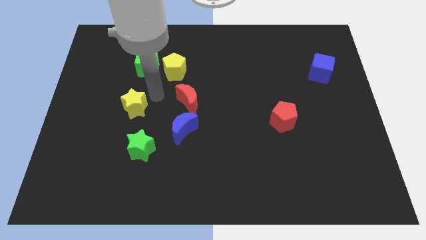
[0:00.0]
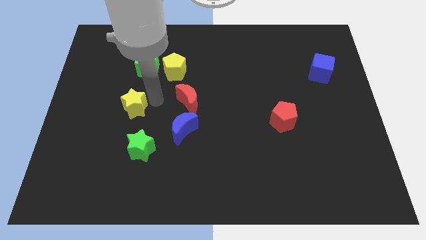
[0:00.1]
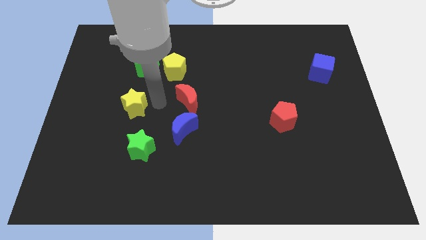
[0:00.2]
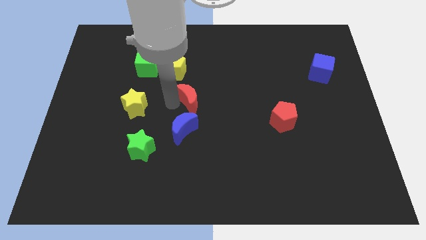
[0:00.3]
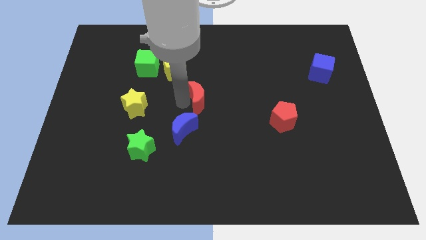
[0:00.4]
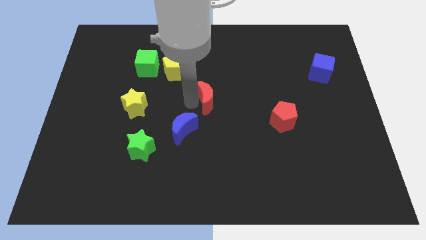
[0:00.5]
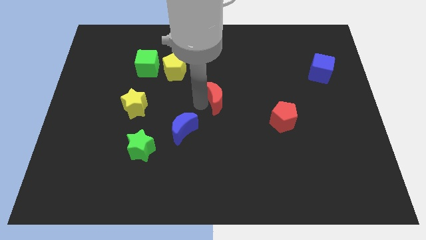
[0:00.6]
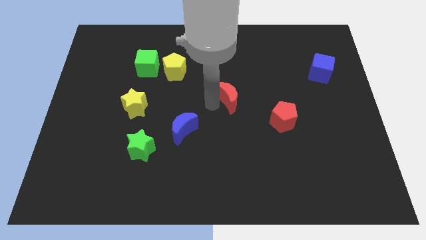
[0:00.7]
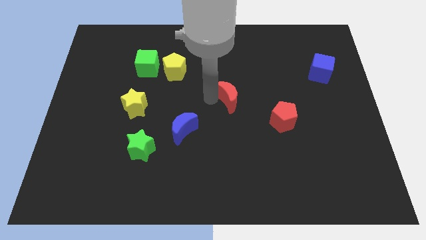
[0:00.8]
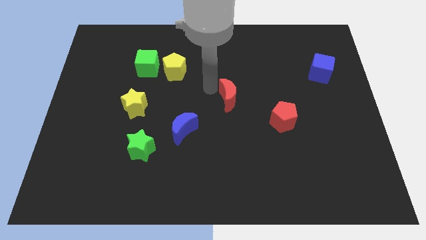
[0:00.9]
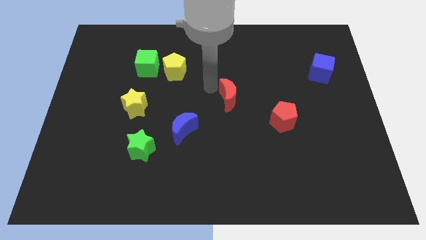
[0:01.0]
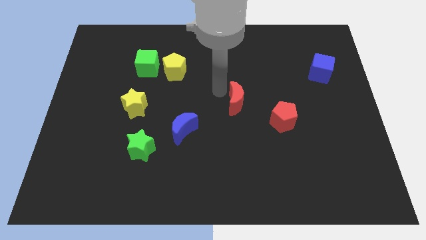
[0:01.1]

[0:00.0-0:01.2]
move the red crescent to the center of the board

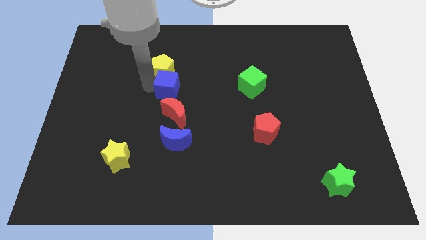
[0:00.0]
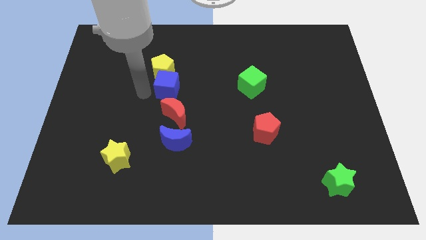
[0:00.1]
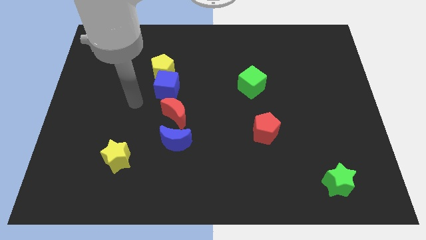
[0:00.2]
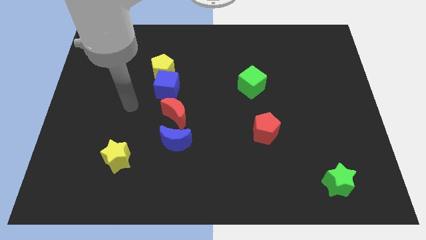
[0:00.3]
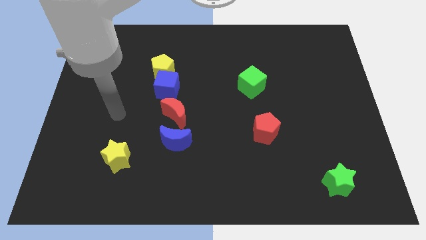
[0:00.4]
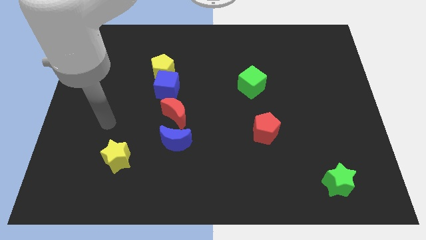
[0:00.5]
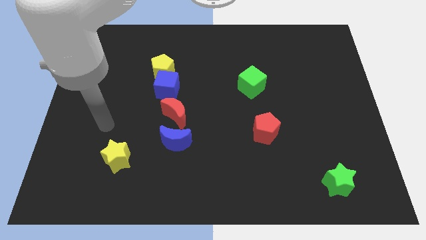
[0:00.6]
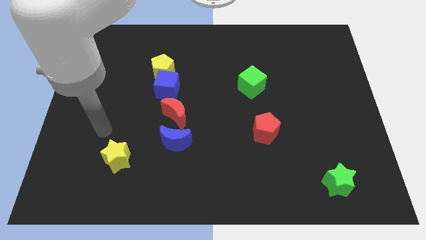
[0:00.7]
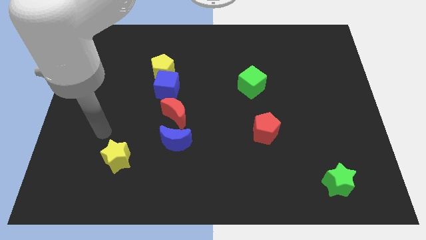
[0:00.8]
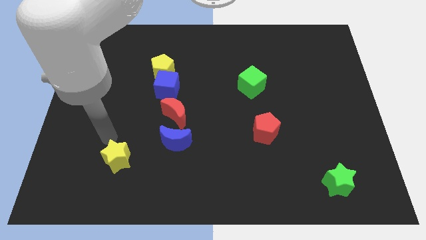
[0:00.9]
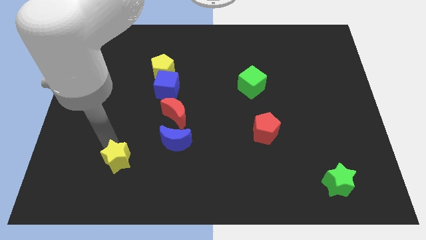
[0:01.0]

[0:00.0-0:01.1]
go and touch the top of the yellow star

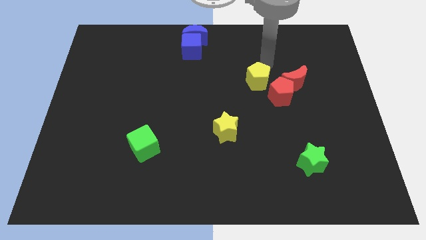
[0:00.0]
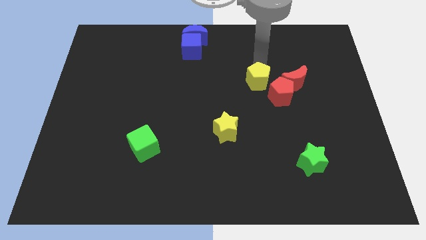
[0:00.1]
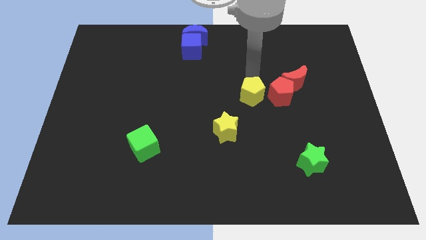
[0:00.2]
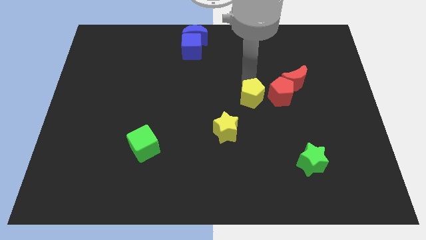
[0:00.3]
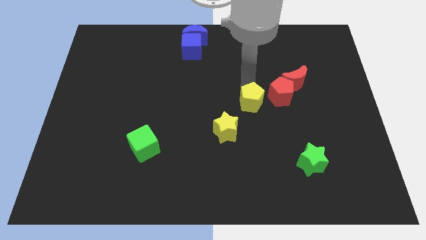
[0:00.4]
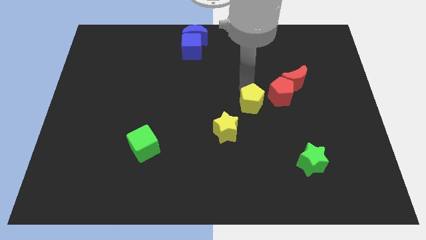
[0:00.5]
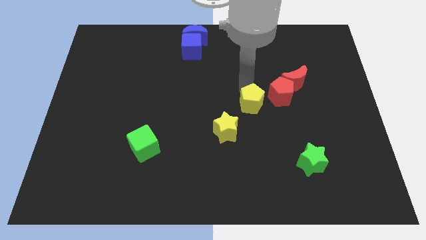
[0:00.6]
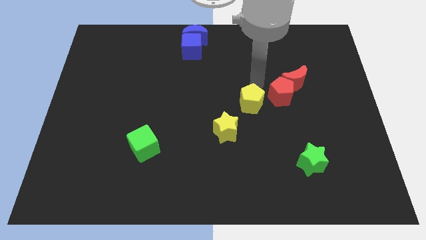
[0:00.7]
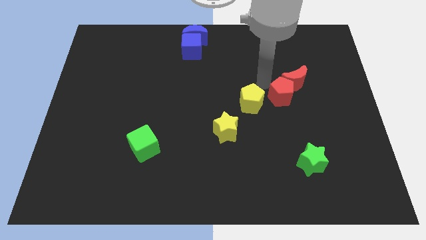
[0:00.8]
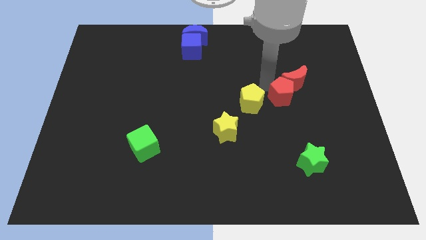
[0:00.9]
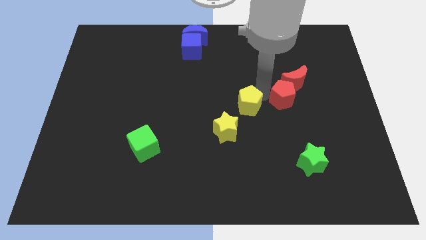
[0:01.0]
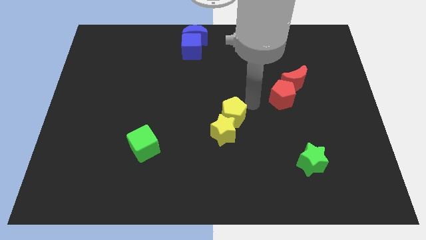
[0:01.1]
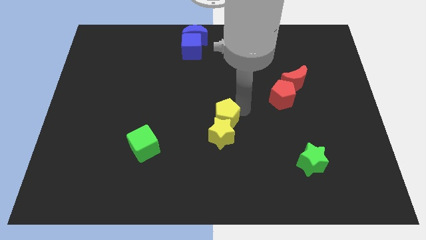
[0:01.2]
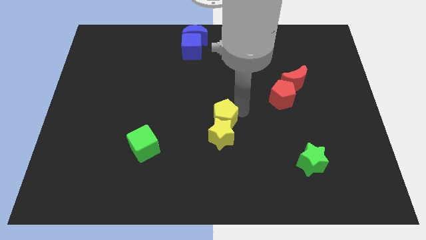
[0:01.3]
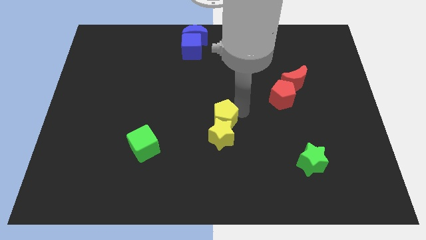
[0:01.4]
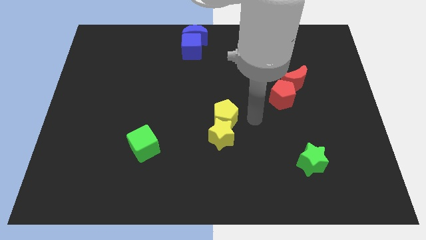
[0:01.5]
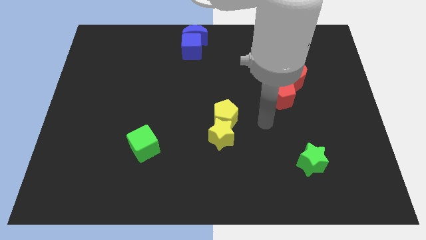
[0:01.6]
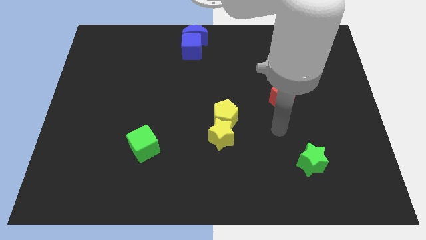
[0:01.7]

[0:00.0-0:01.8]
touch the yellow star with yellow pentagon

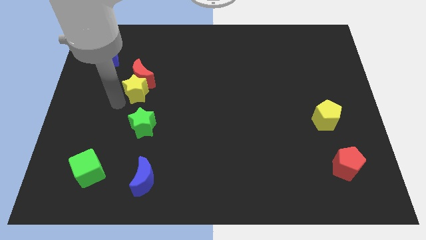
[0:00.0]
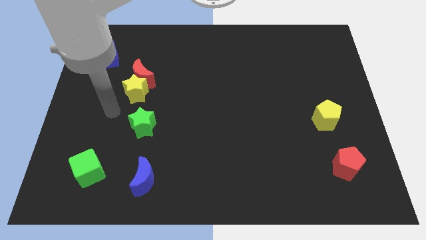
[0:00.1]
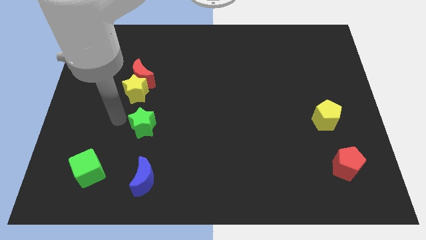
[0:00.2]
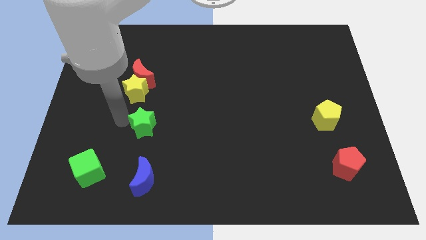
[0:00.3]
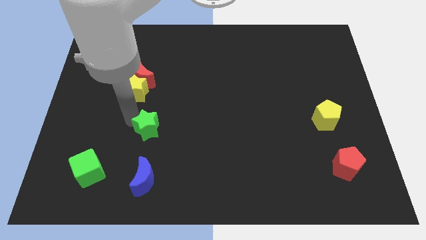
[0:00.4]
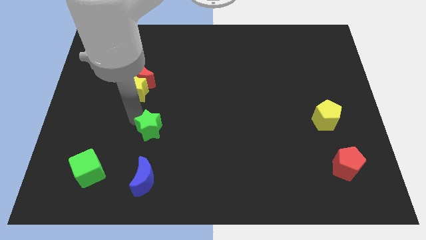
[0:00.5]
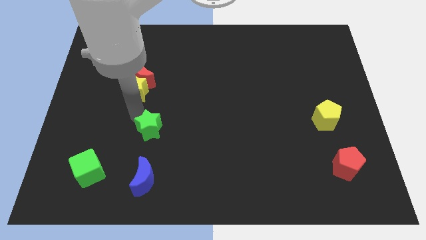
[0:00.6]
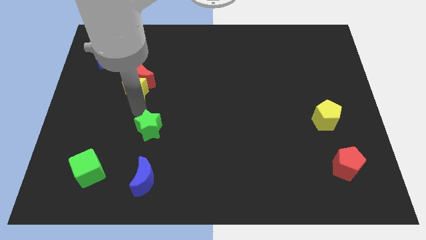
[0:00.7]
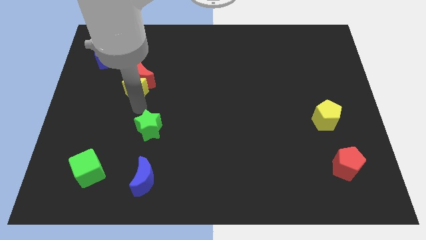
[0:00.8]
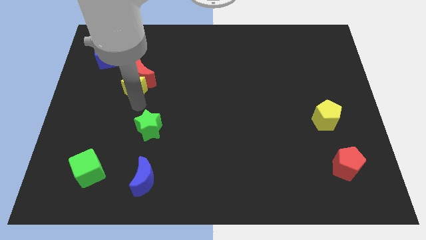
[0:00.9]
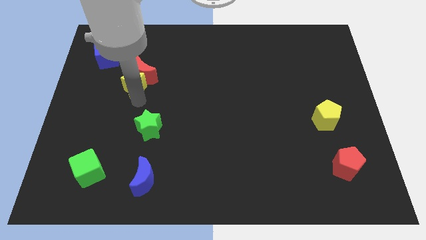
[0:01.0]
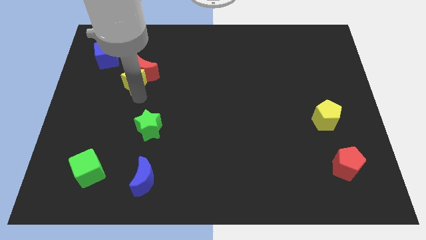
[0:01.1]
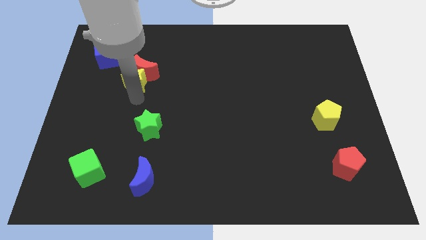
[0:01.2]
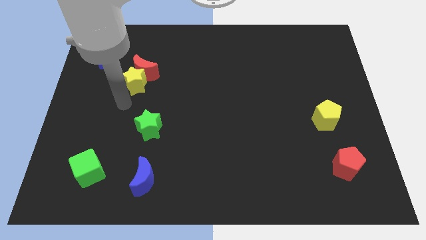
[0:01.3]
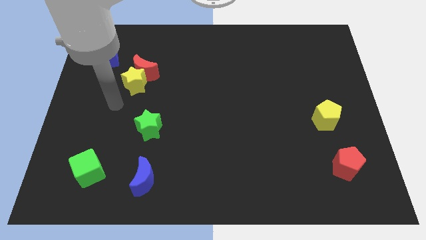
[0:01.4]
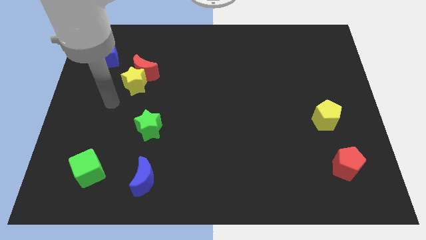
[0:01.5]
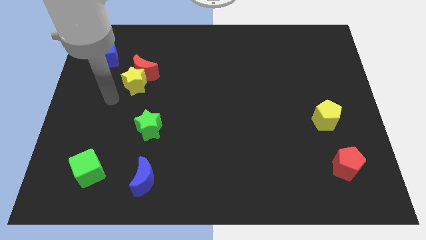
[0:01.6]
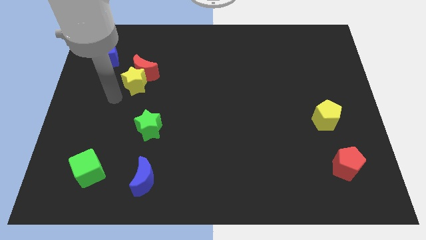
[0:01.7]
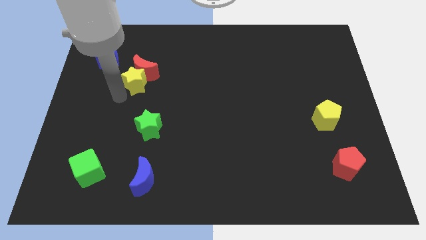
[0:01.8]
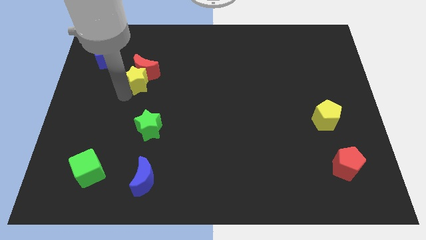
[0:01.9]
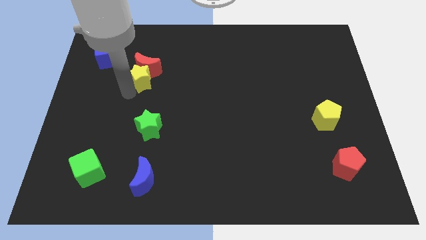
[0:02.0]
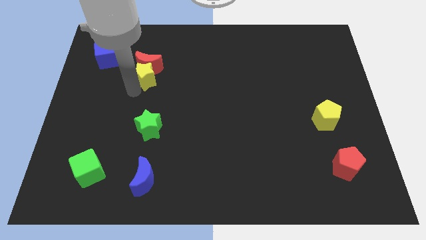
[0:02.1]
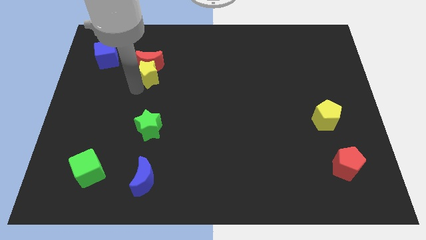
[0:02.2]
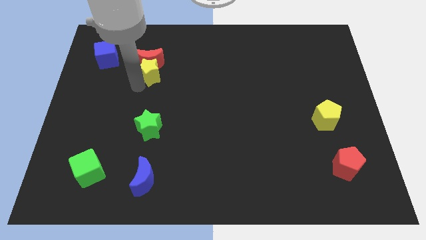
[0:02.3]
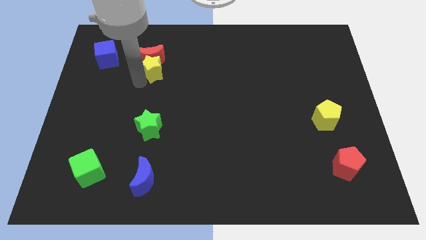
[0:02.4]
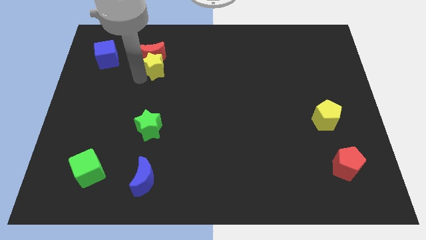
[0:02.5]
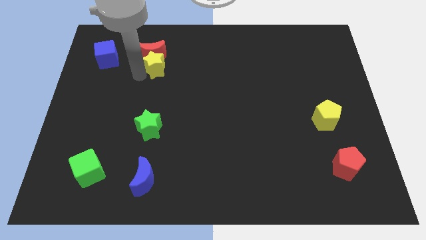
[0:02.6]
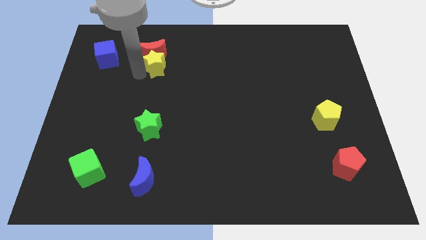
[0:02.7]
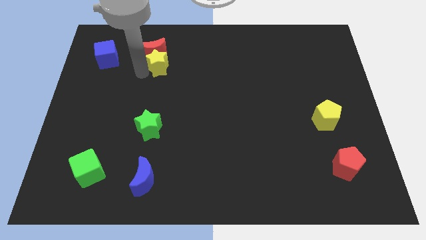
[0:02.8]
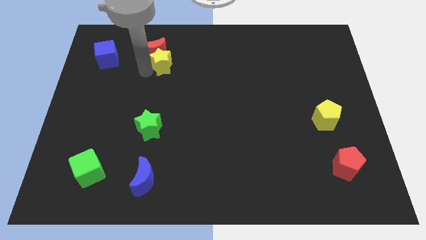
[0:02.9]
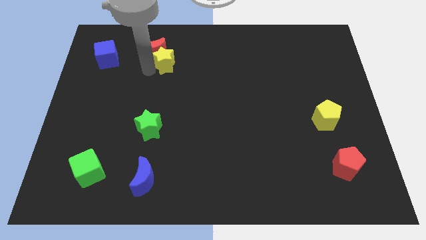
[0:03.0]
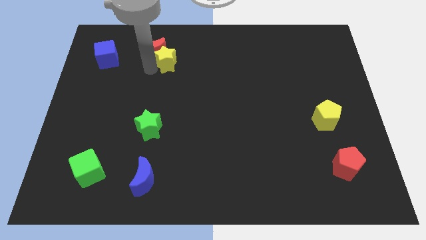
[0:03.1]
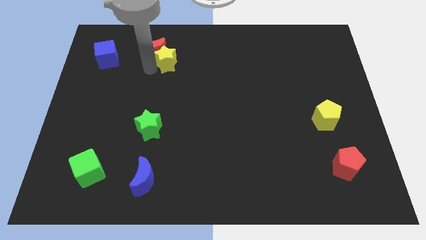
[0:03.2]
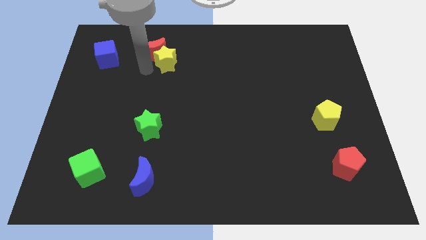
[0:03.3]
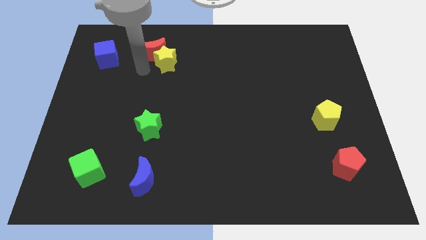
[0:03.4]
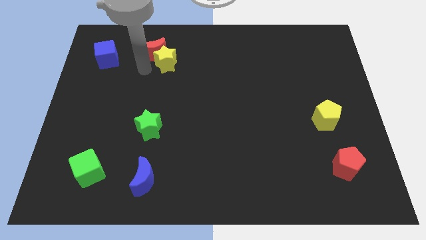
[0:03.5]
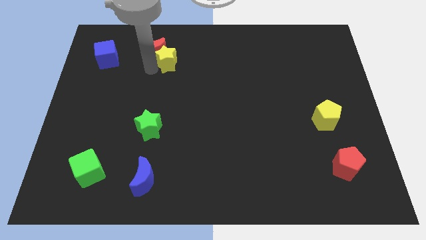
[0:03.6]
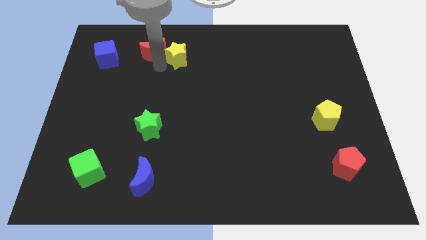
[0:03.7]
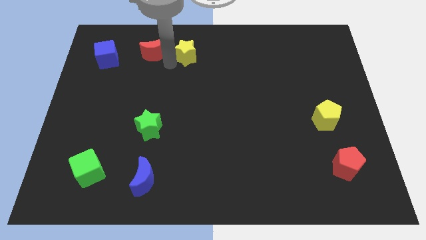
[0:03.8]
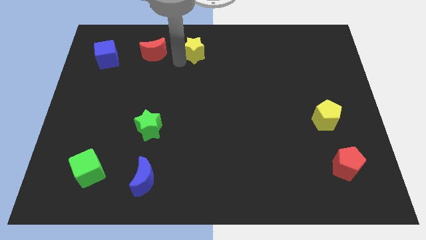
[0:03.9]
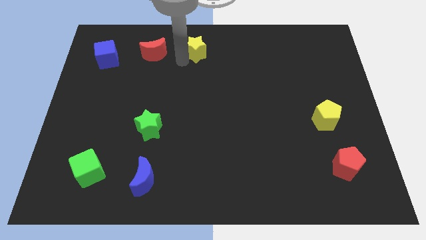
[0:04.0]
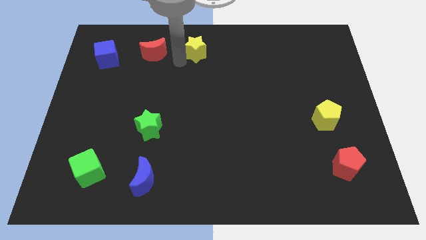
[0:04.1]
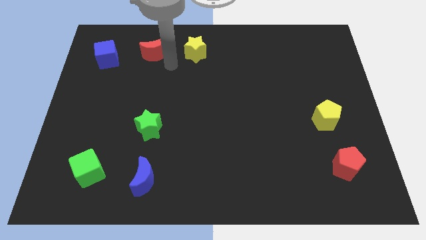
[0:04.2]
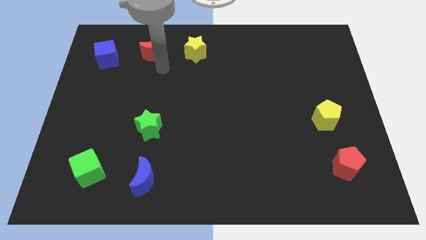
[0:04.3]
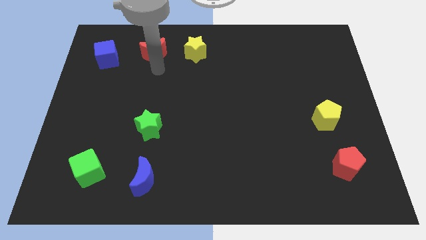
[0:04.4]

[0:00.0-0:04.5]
slide red moon and the yellow star to form a horizontal line

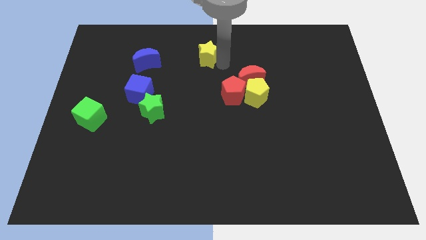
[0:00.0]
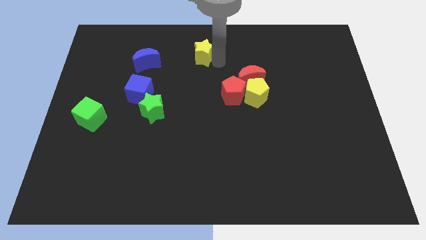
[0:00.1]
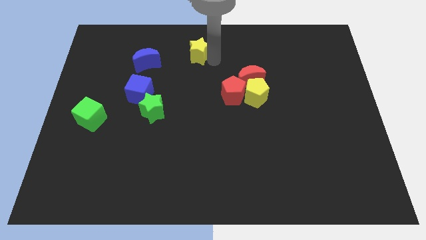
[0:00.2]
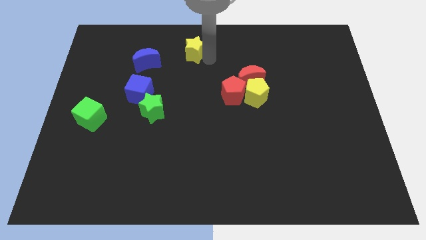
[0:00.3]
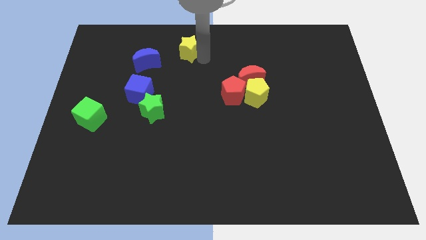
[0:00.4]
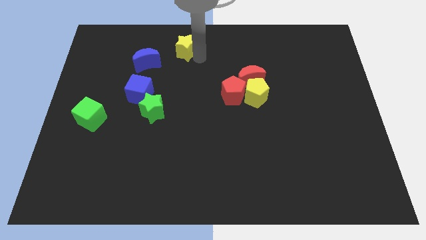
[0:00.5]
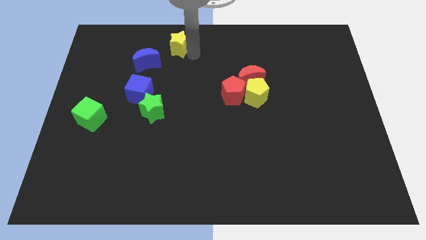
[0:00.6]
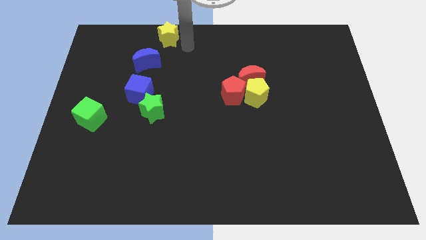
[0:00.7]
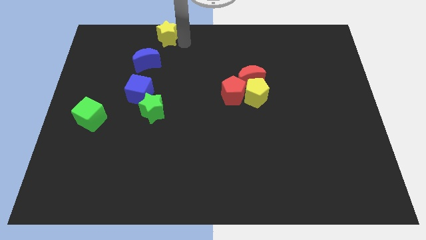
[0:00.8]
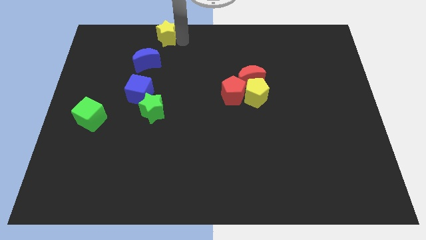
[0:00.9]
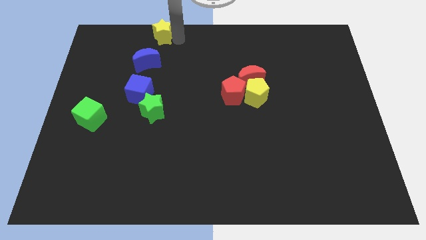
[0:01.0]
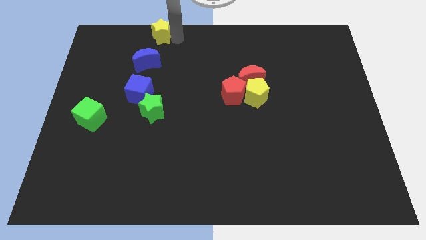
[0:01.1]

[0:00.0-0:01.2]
push the yellow star top center
